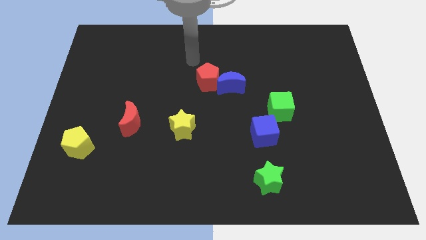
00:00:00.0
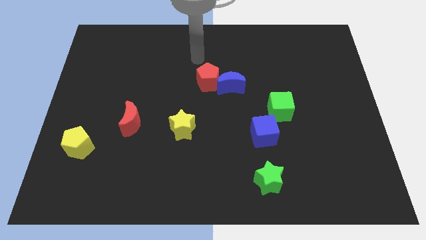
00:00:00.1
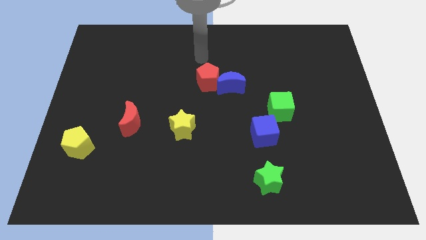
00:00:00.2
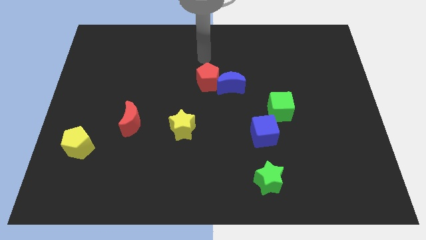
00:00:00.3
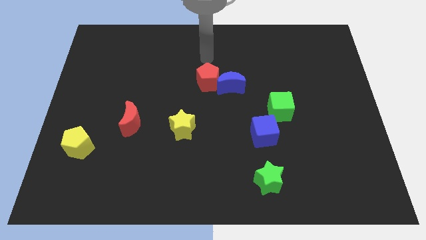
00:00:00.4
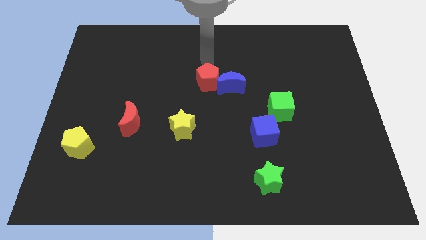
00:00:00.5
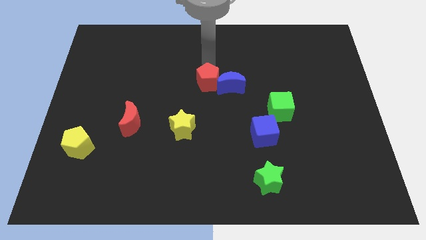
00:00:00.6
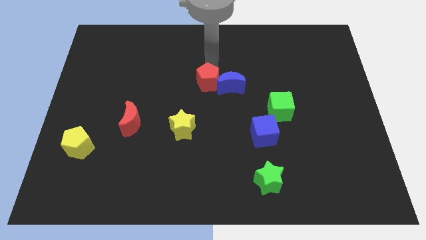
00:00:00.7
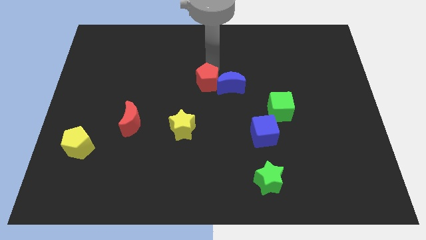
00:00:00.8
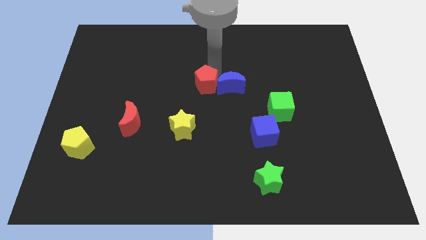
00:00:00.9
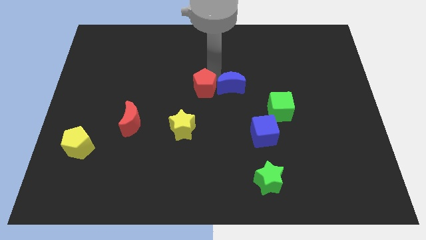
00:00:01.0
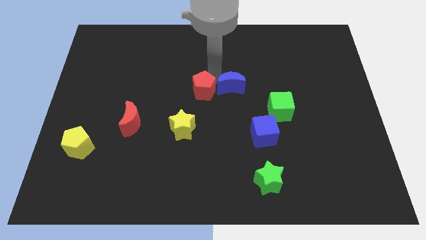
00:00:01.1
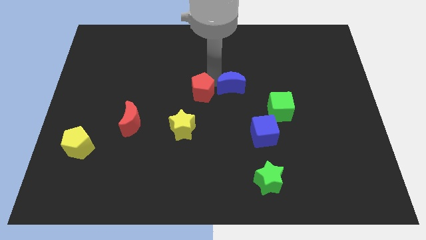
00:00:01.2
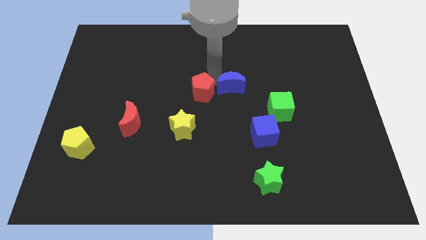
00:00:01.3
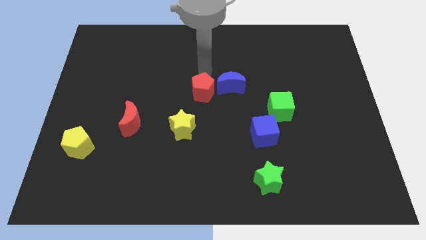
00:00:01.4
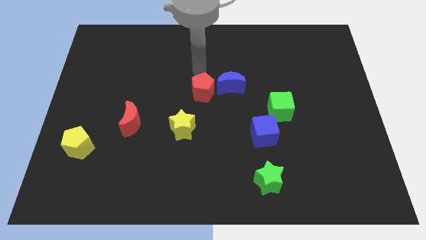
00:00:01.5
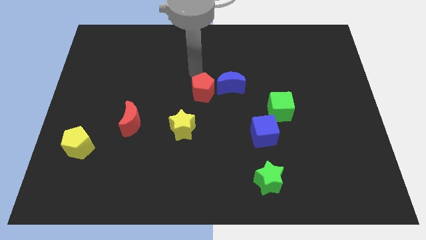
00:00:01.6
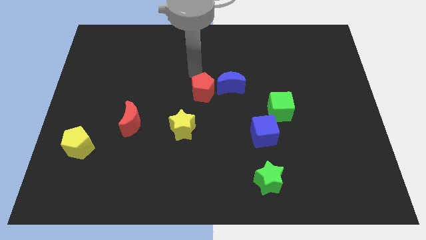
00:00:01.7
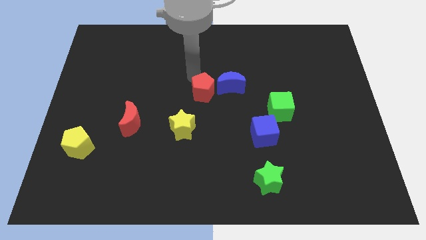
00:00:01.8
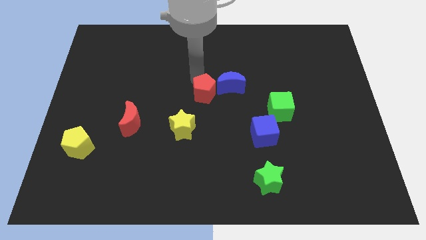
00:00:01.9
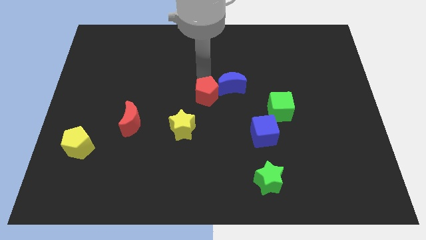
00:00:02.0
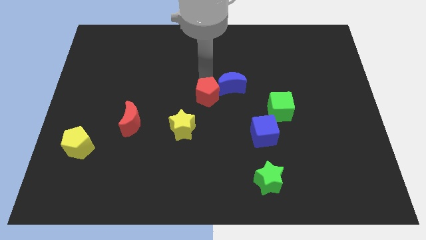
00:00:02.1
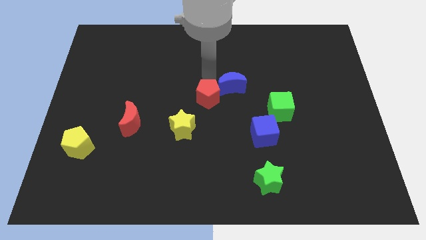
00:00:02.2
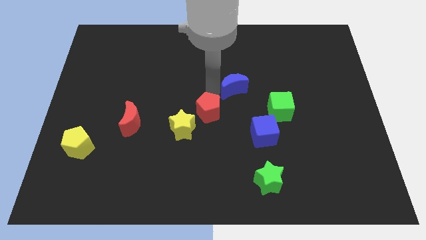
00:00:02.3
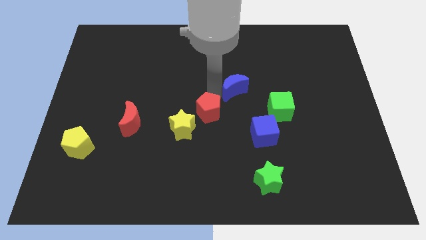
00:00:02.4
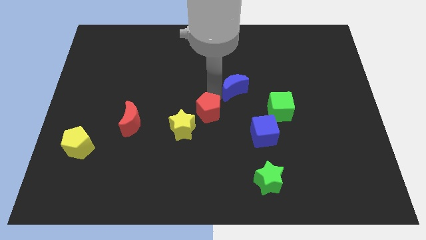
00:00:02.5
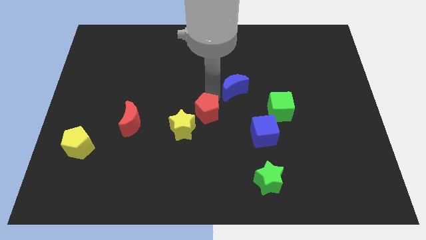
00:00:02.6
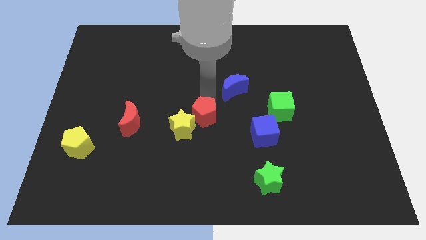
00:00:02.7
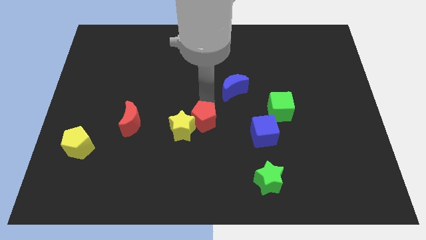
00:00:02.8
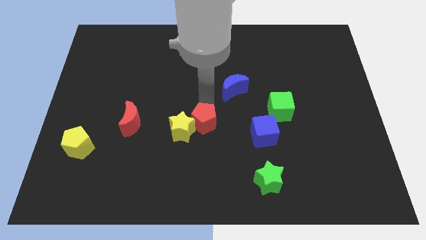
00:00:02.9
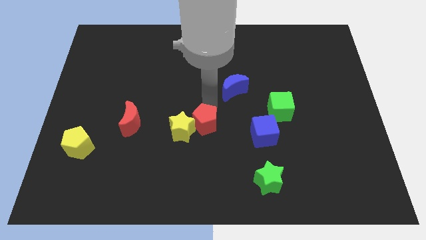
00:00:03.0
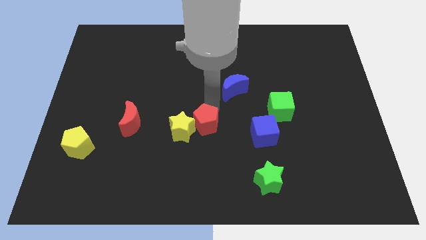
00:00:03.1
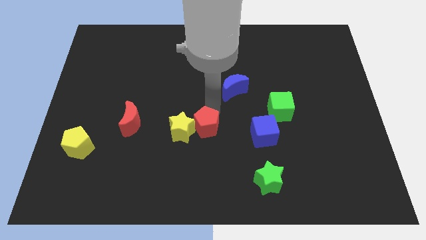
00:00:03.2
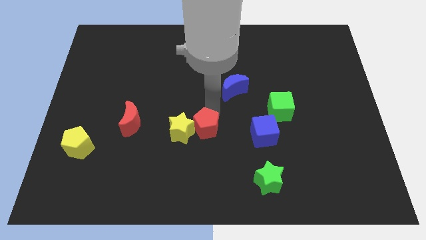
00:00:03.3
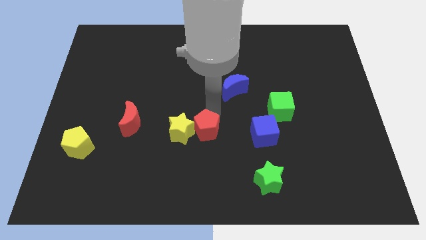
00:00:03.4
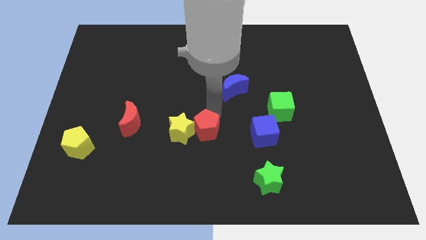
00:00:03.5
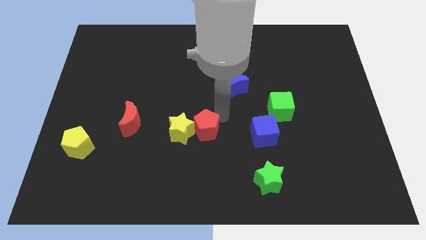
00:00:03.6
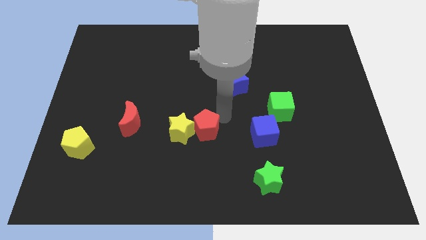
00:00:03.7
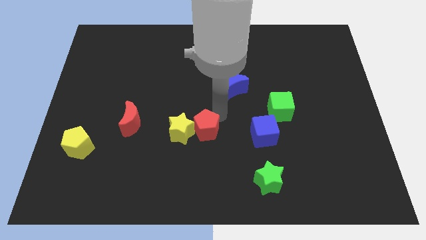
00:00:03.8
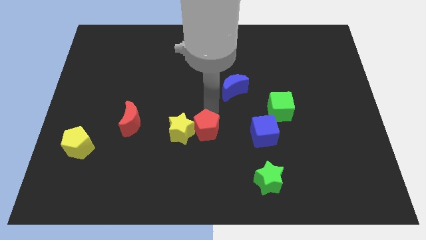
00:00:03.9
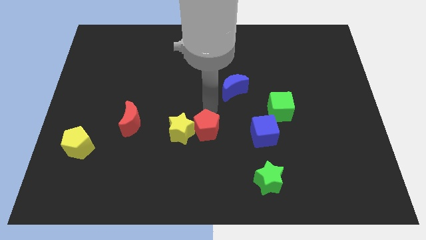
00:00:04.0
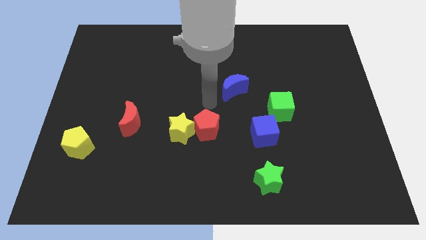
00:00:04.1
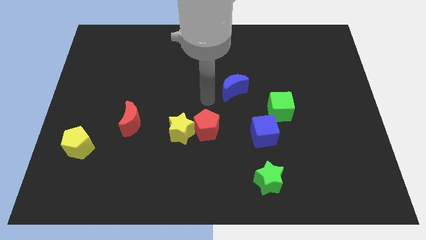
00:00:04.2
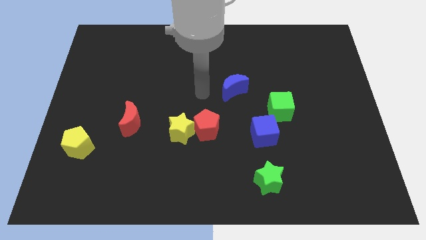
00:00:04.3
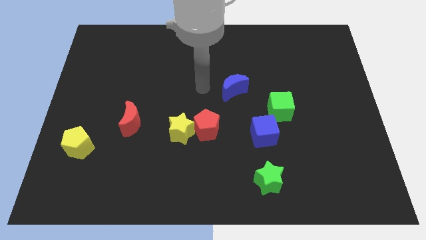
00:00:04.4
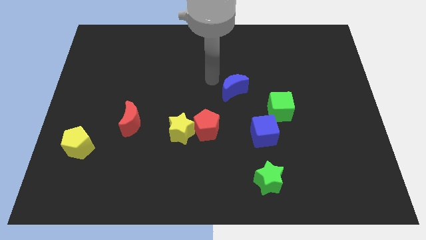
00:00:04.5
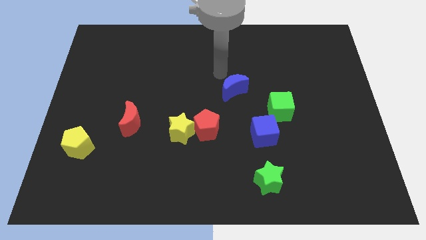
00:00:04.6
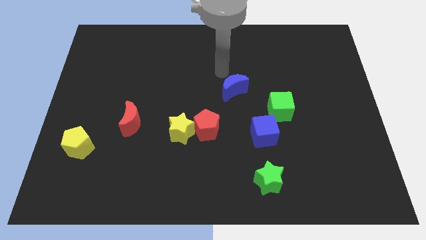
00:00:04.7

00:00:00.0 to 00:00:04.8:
put the red pentagon to the right side of the yellow star

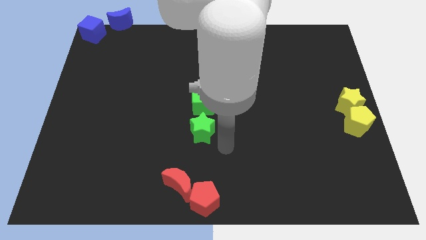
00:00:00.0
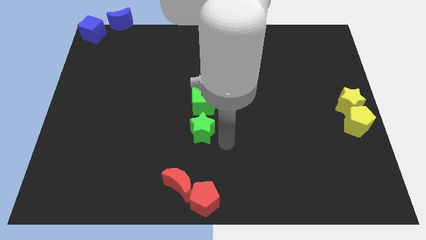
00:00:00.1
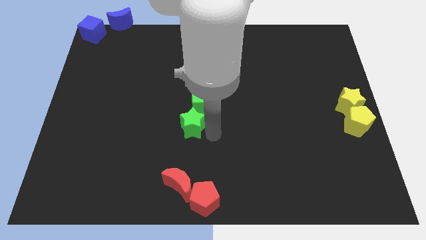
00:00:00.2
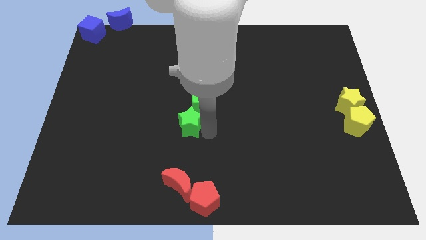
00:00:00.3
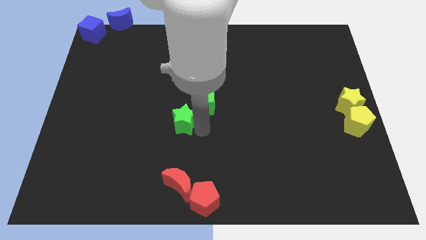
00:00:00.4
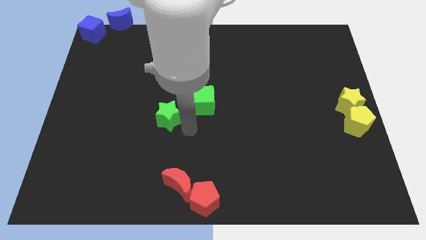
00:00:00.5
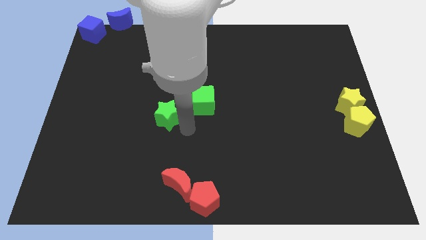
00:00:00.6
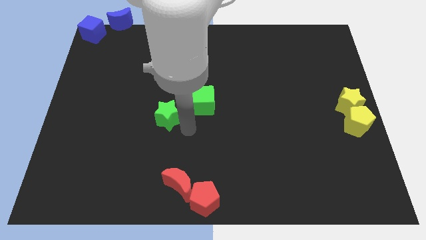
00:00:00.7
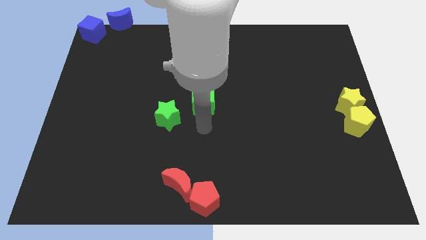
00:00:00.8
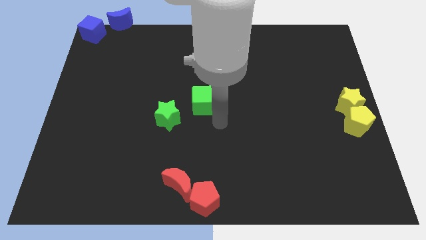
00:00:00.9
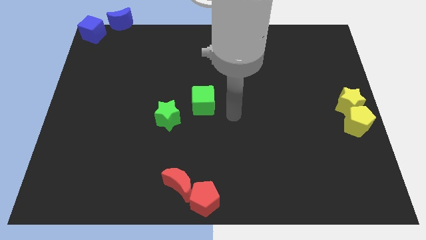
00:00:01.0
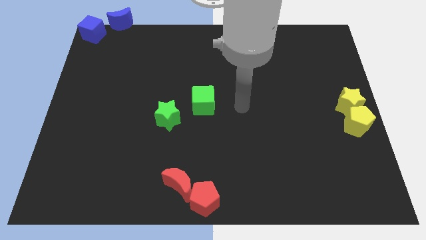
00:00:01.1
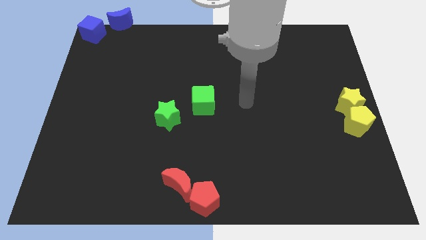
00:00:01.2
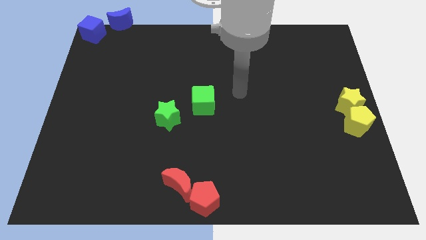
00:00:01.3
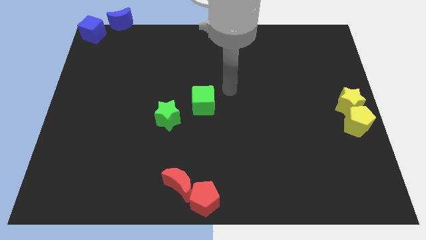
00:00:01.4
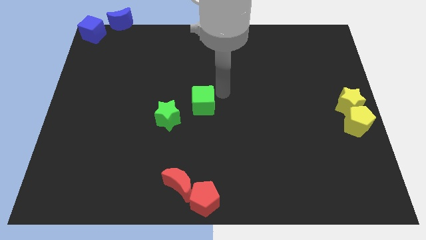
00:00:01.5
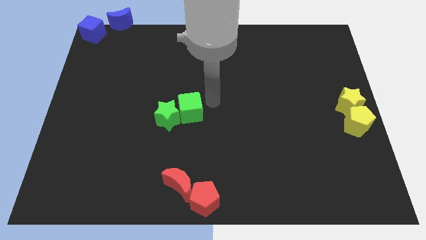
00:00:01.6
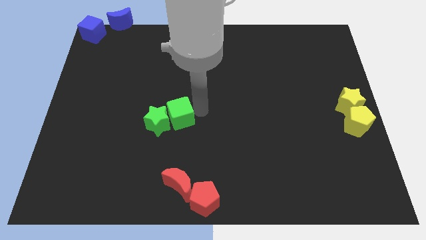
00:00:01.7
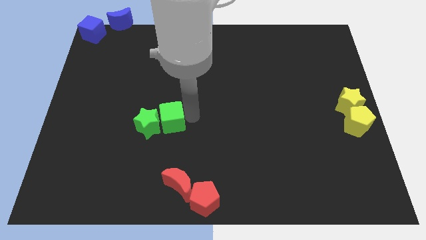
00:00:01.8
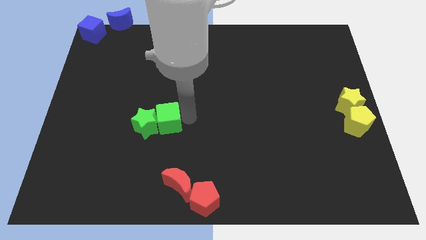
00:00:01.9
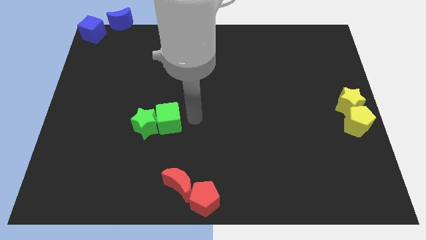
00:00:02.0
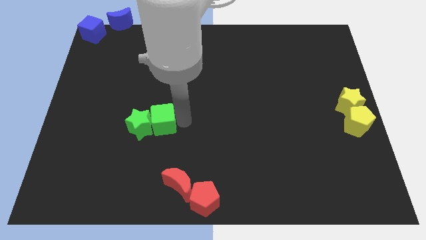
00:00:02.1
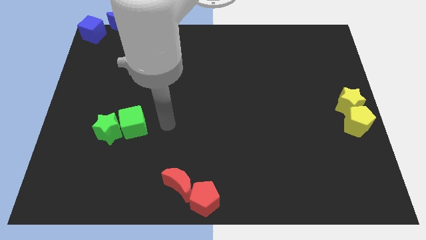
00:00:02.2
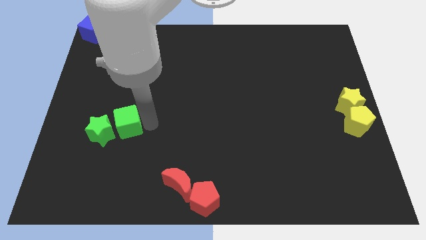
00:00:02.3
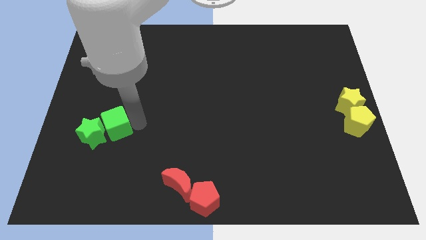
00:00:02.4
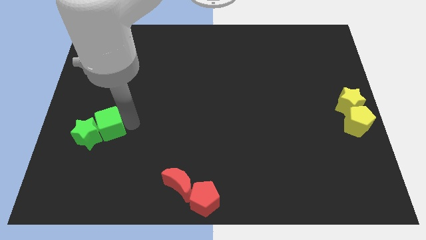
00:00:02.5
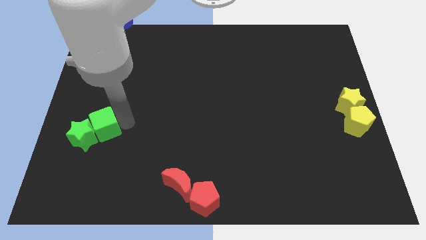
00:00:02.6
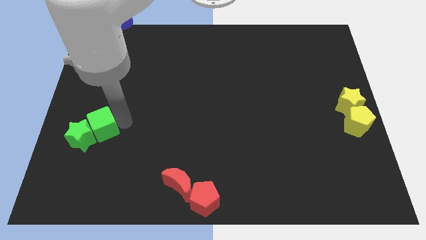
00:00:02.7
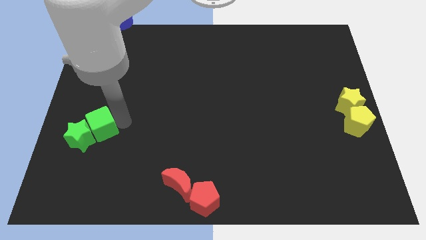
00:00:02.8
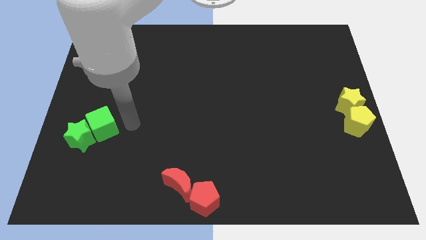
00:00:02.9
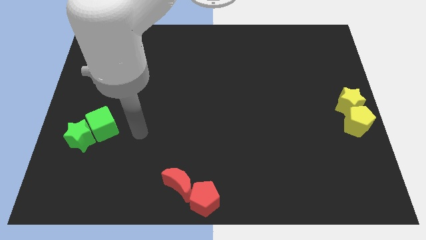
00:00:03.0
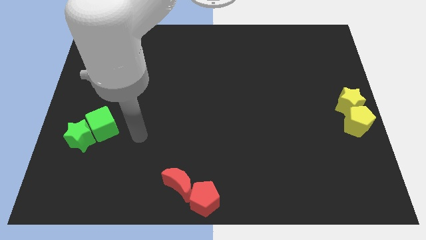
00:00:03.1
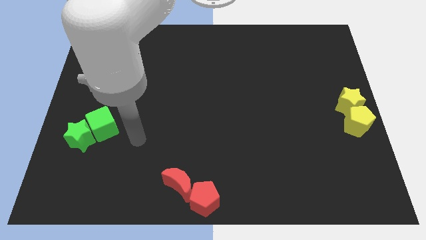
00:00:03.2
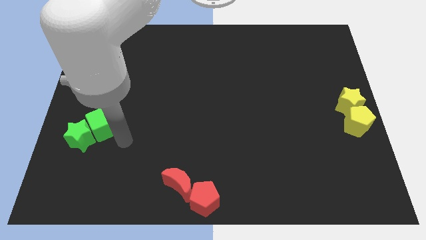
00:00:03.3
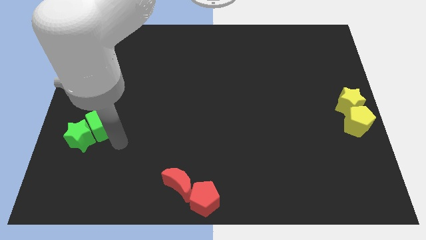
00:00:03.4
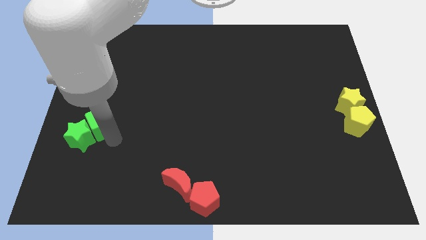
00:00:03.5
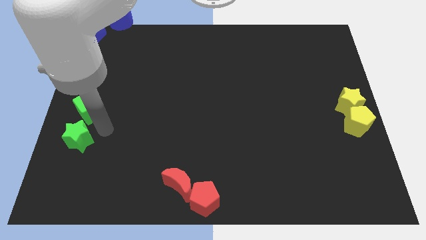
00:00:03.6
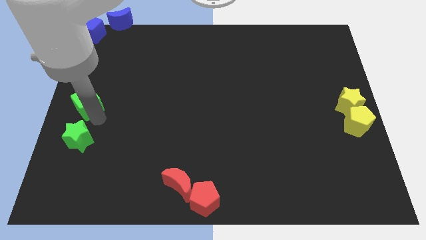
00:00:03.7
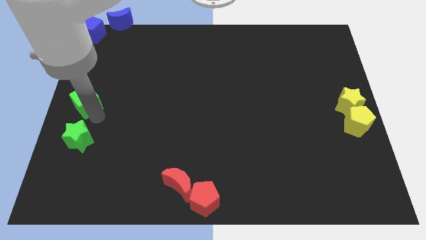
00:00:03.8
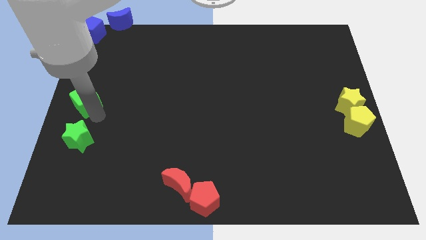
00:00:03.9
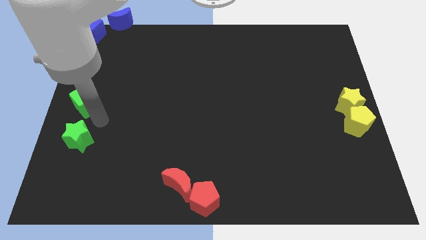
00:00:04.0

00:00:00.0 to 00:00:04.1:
push the green blocks towards the center left
